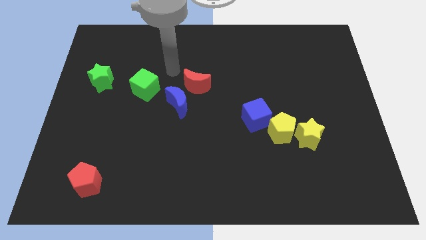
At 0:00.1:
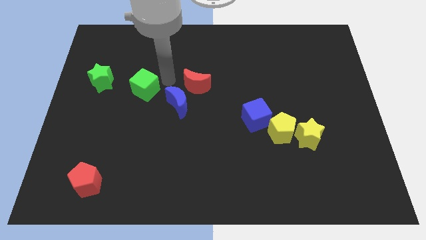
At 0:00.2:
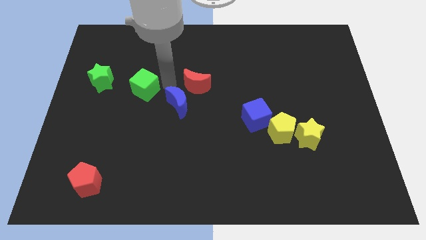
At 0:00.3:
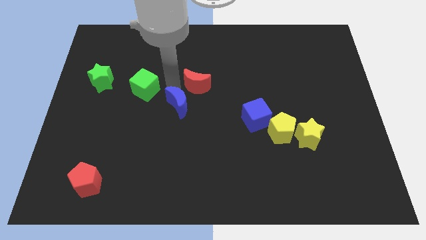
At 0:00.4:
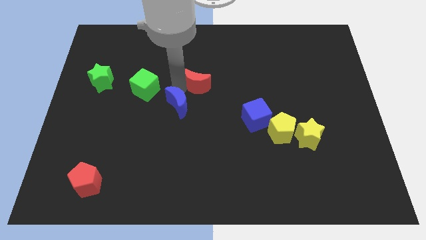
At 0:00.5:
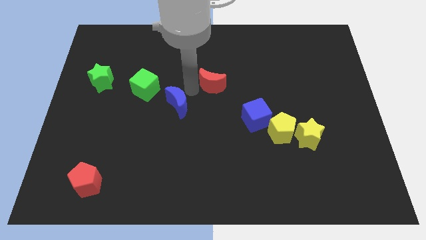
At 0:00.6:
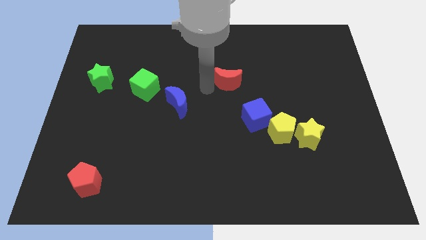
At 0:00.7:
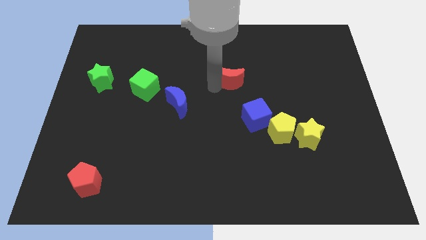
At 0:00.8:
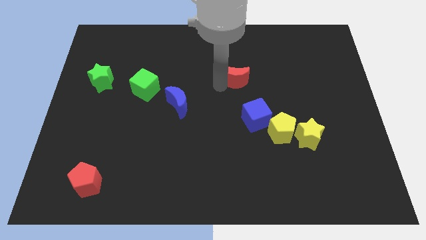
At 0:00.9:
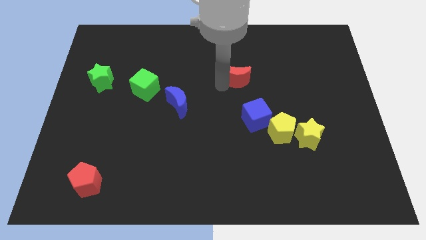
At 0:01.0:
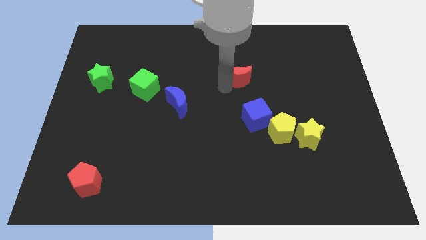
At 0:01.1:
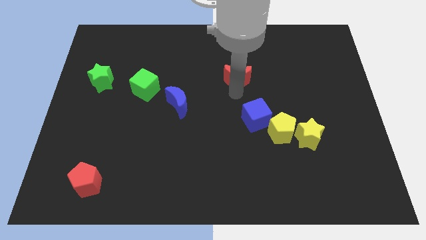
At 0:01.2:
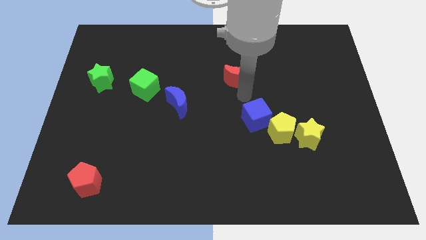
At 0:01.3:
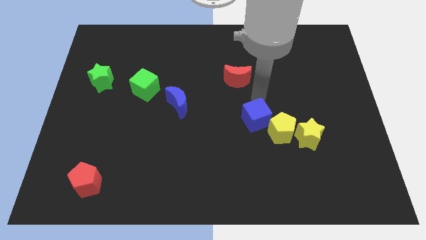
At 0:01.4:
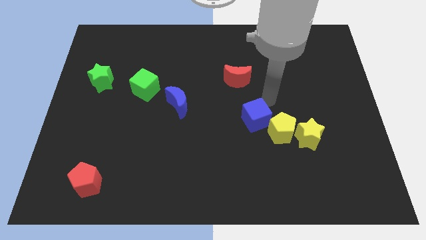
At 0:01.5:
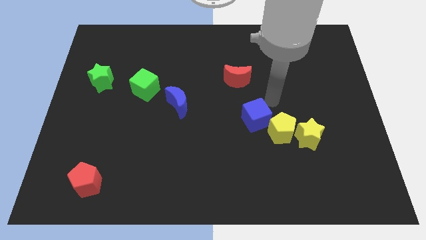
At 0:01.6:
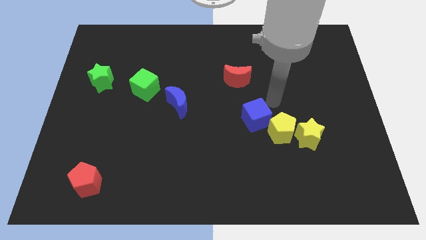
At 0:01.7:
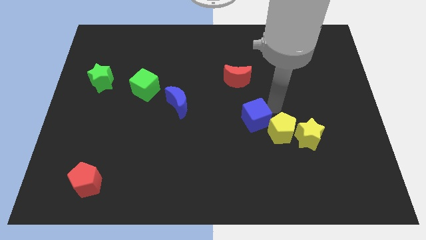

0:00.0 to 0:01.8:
push the red moon above the blue cube

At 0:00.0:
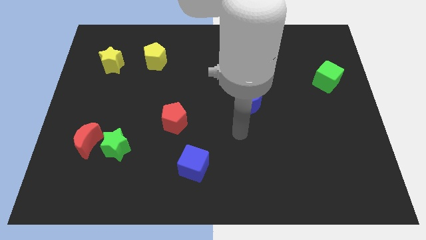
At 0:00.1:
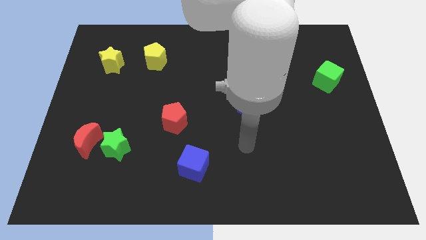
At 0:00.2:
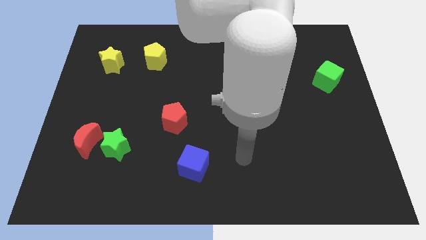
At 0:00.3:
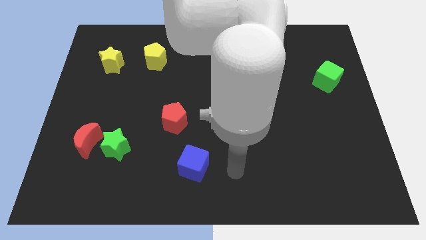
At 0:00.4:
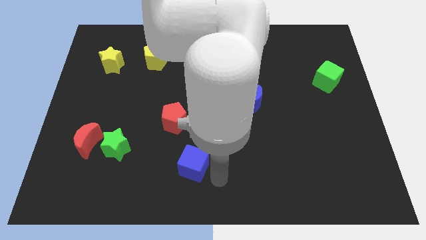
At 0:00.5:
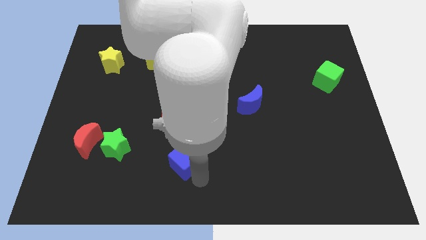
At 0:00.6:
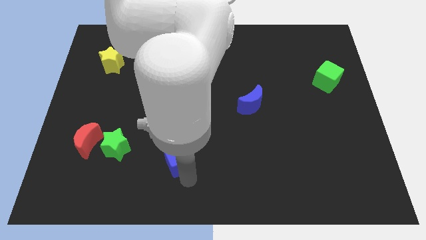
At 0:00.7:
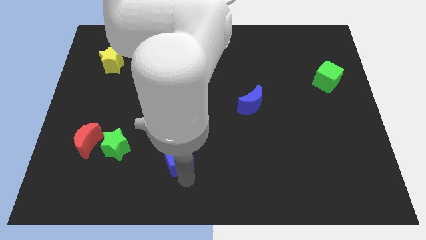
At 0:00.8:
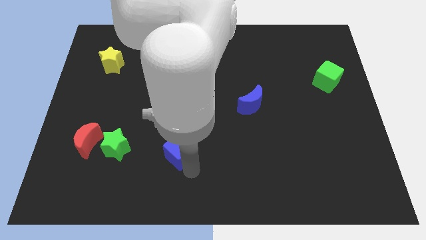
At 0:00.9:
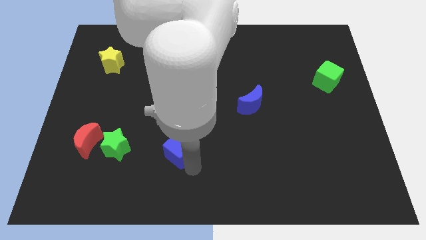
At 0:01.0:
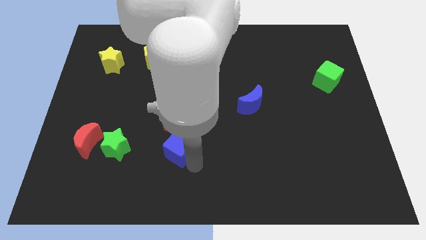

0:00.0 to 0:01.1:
push the blue block slightly up

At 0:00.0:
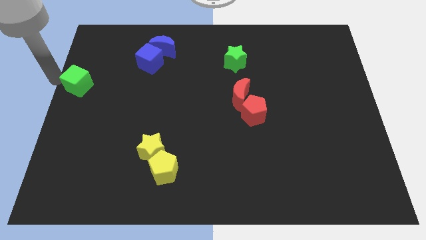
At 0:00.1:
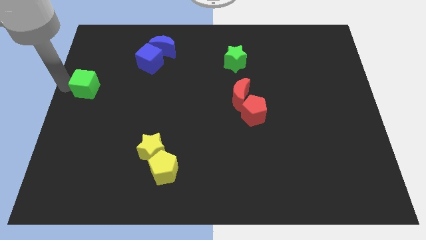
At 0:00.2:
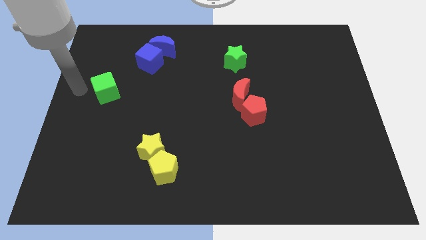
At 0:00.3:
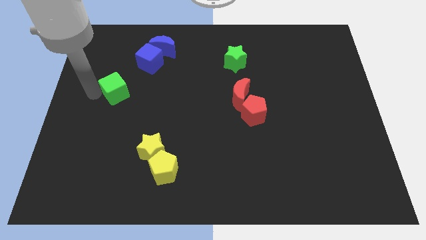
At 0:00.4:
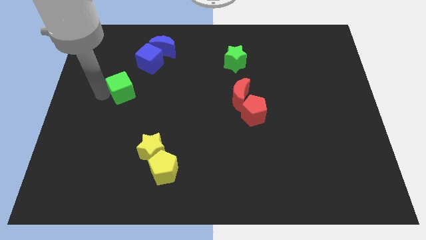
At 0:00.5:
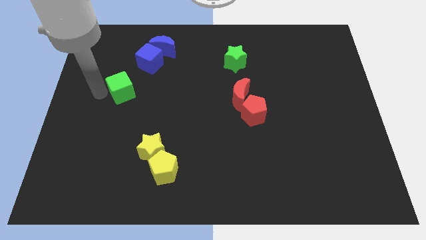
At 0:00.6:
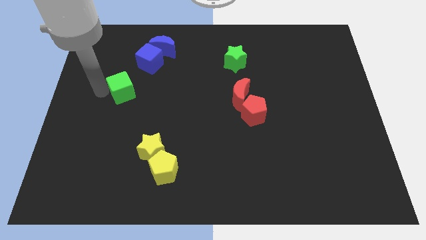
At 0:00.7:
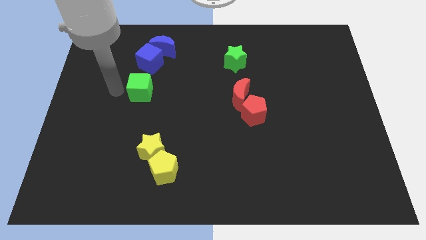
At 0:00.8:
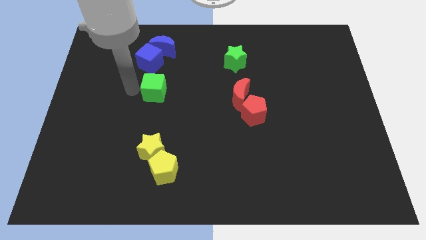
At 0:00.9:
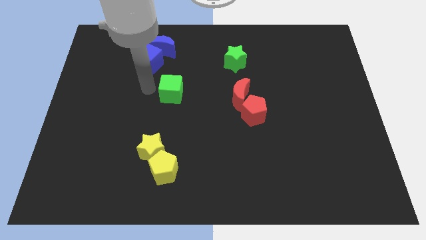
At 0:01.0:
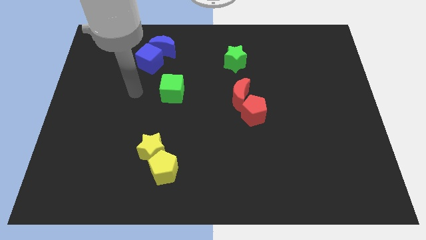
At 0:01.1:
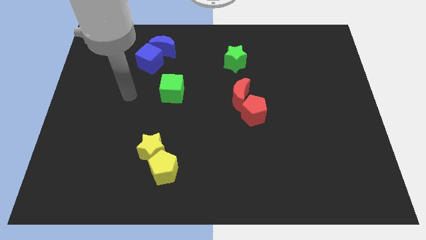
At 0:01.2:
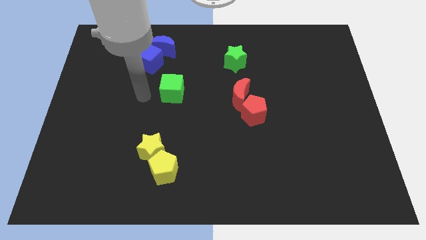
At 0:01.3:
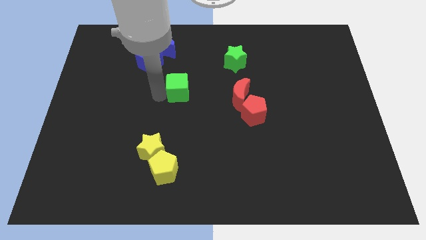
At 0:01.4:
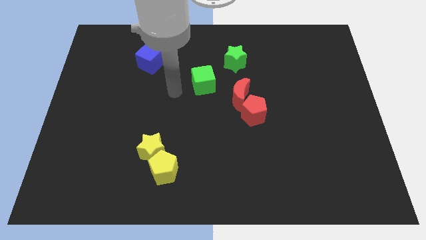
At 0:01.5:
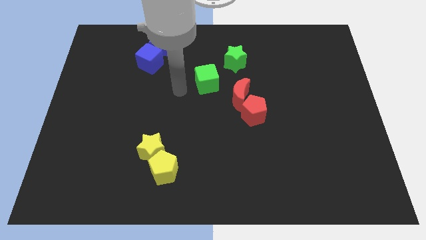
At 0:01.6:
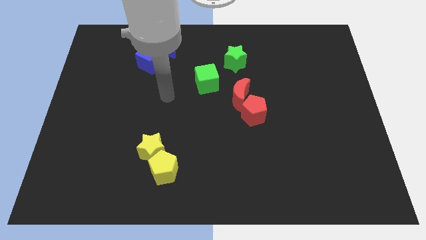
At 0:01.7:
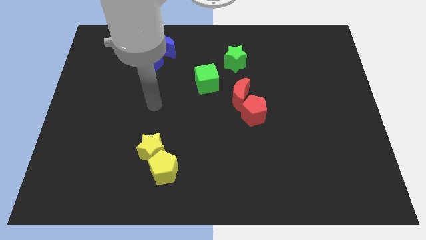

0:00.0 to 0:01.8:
push the green cube towards the green star

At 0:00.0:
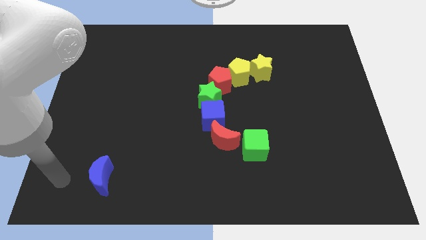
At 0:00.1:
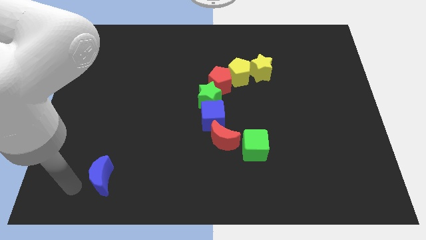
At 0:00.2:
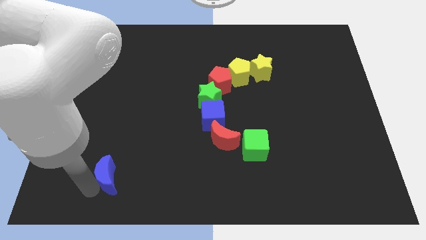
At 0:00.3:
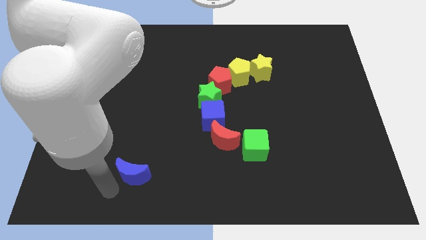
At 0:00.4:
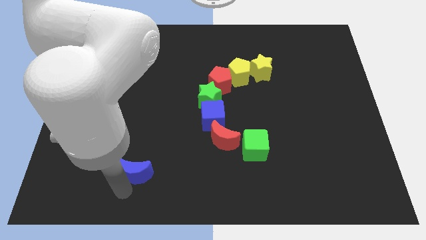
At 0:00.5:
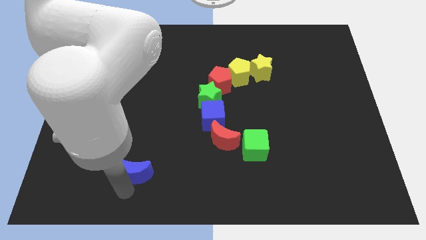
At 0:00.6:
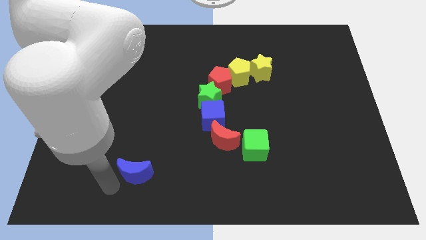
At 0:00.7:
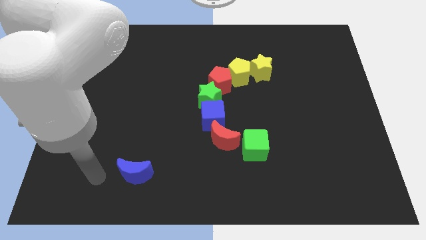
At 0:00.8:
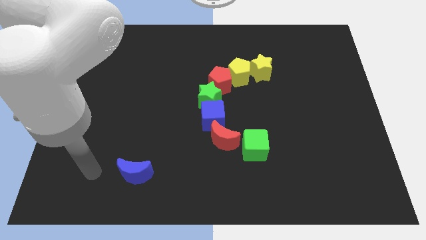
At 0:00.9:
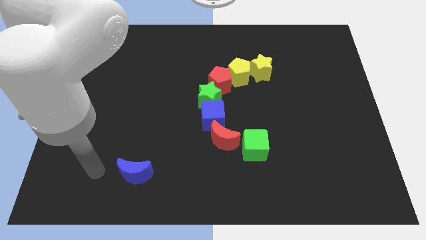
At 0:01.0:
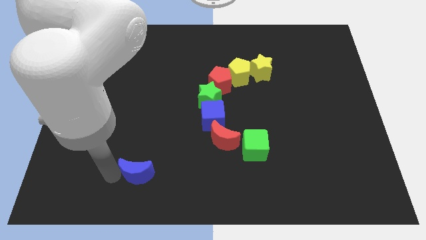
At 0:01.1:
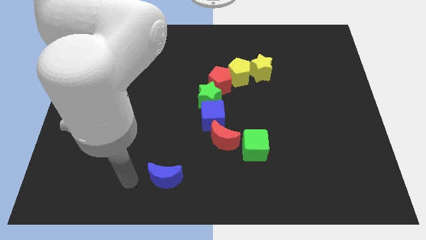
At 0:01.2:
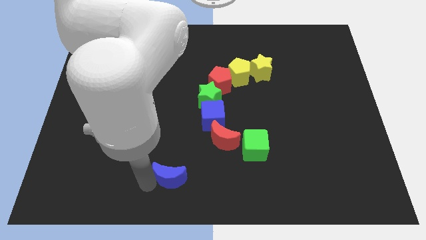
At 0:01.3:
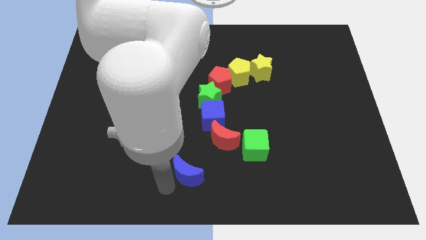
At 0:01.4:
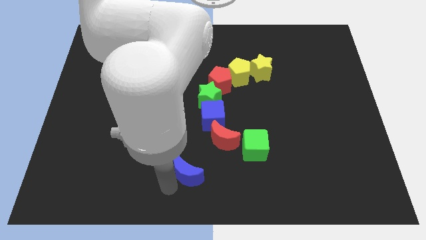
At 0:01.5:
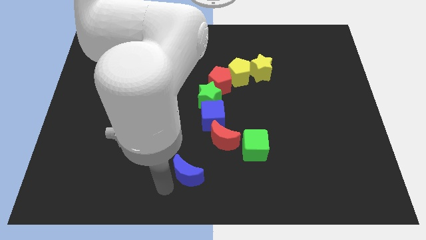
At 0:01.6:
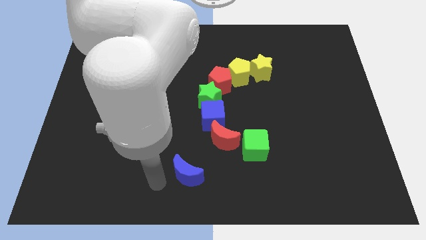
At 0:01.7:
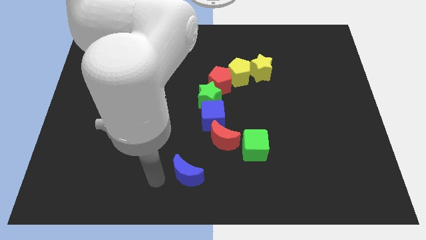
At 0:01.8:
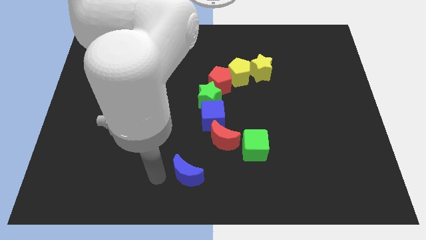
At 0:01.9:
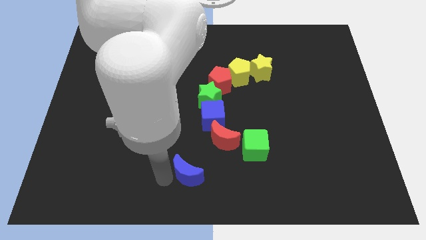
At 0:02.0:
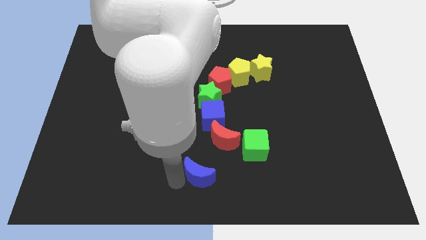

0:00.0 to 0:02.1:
push the blue crescent towards the green cube

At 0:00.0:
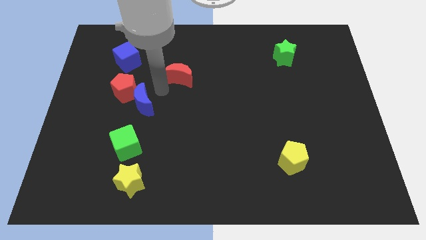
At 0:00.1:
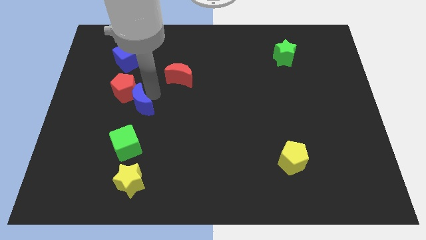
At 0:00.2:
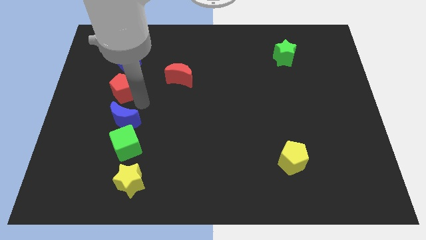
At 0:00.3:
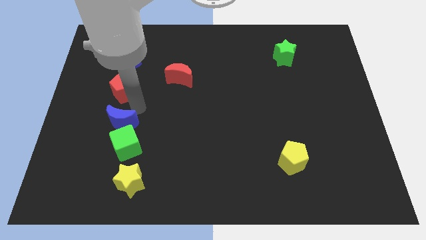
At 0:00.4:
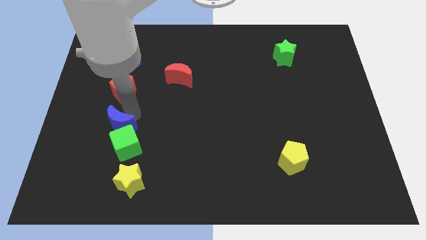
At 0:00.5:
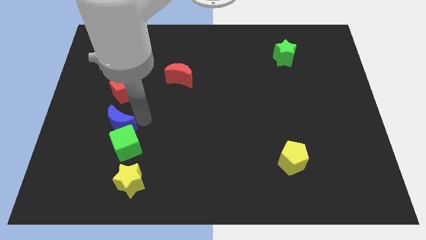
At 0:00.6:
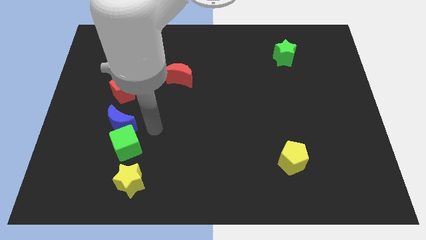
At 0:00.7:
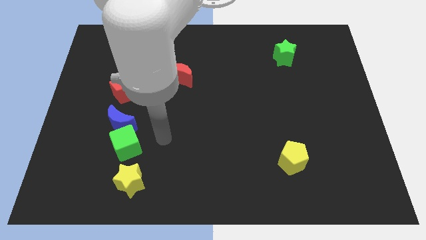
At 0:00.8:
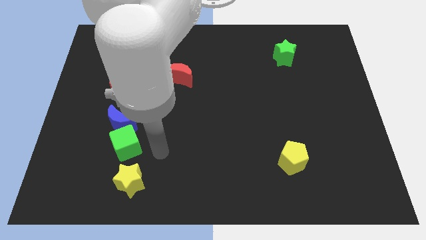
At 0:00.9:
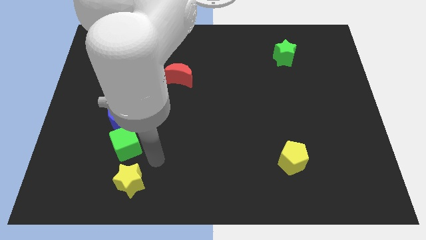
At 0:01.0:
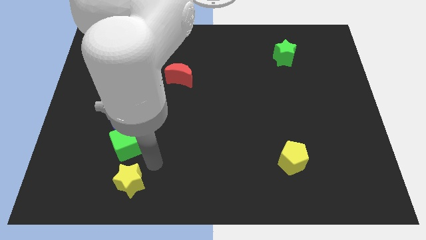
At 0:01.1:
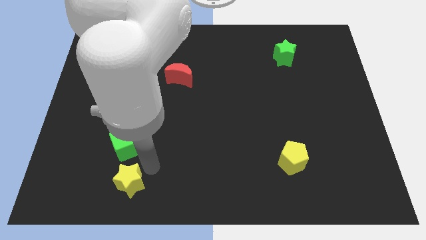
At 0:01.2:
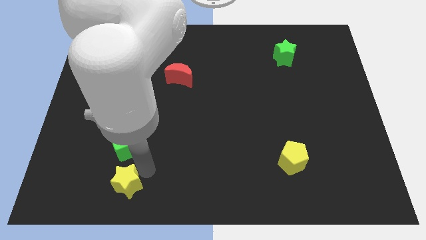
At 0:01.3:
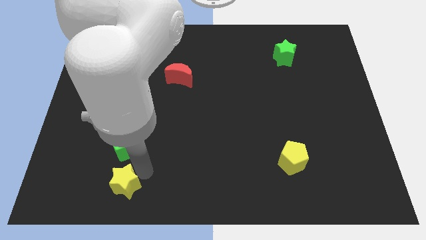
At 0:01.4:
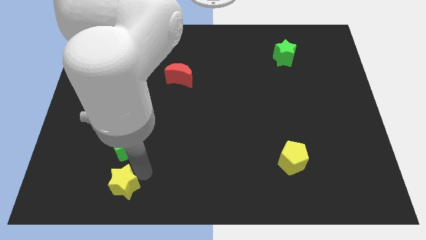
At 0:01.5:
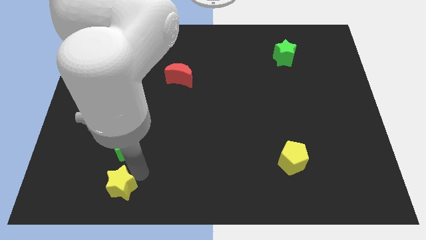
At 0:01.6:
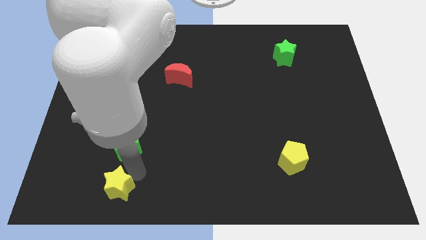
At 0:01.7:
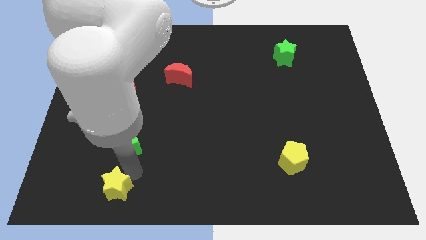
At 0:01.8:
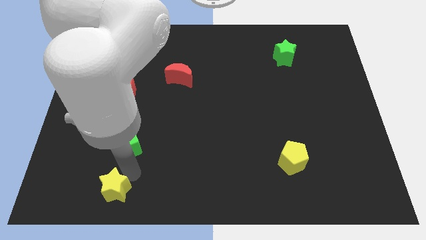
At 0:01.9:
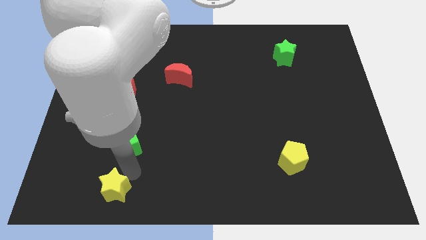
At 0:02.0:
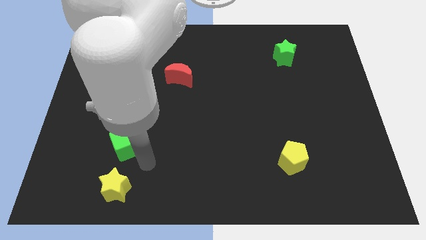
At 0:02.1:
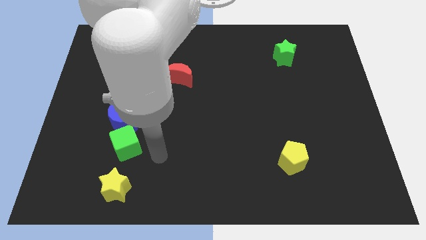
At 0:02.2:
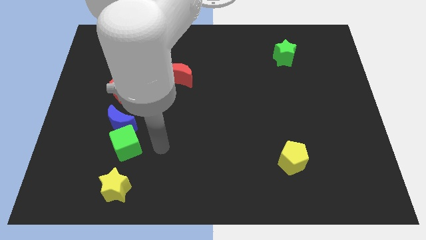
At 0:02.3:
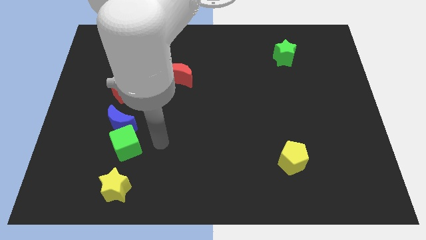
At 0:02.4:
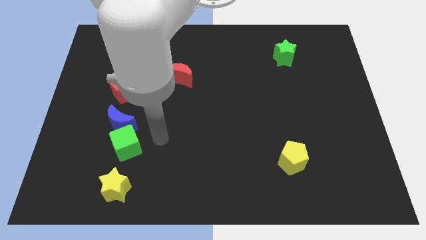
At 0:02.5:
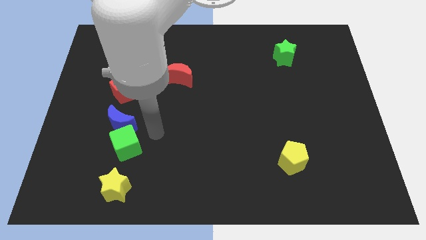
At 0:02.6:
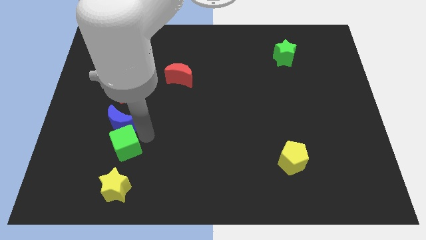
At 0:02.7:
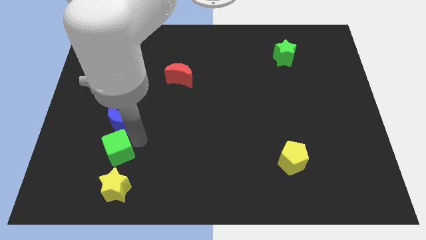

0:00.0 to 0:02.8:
adjust slightly blue crescent green cube and yellow star to form a vertical line
